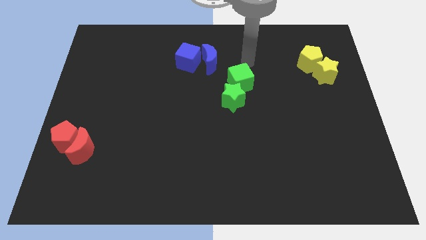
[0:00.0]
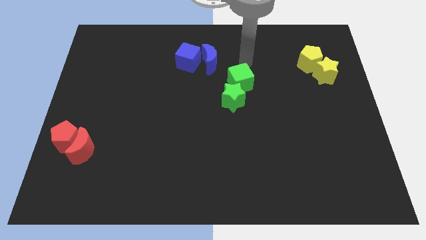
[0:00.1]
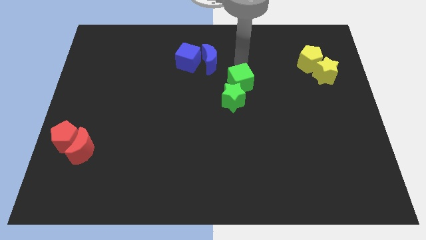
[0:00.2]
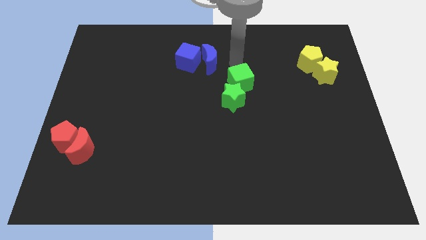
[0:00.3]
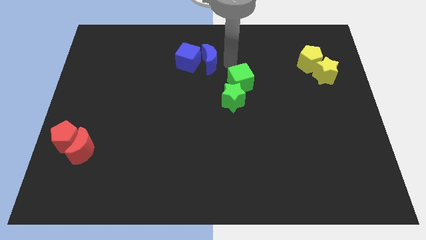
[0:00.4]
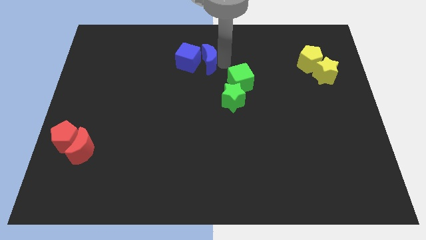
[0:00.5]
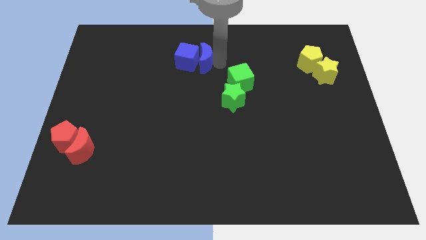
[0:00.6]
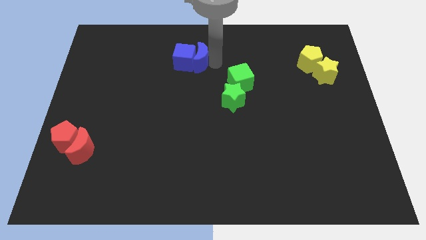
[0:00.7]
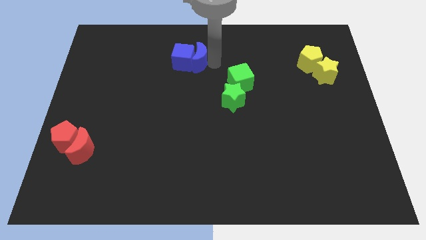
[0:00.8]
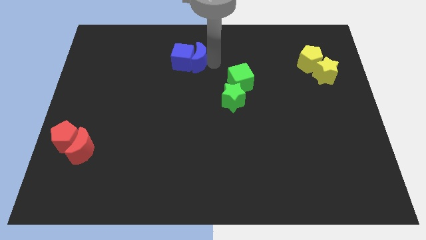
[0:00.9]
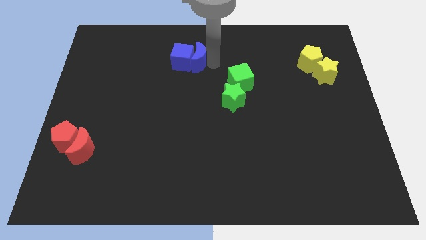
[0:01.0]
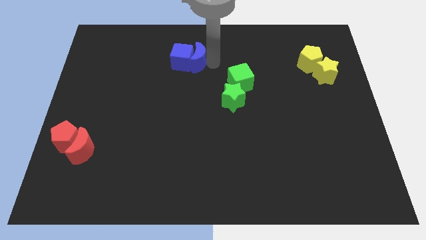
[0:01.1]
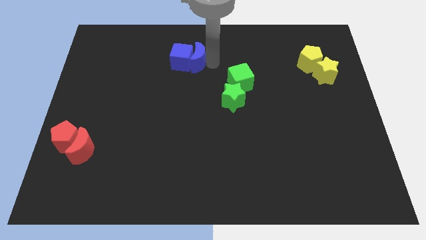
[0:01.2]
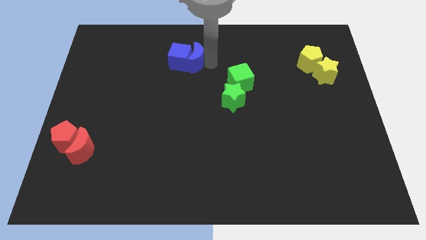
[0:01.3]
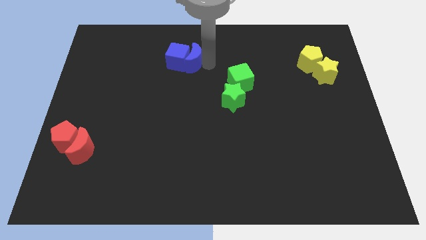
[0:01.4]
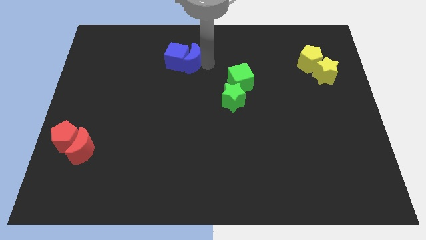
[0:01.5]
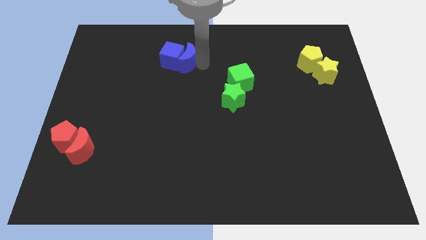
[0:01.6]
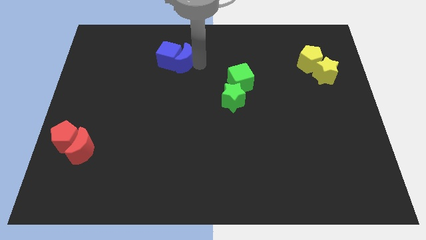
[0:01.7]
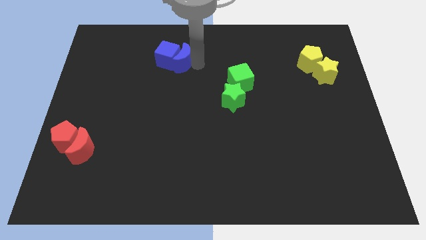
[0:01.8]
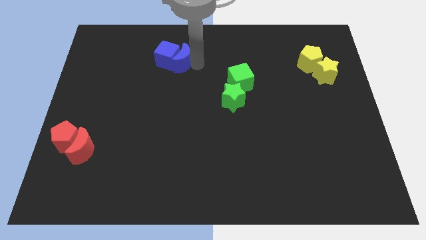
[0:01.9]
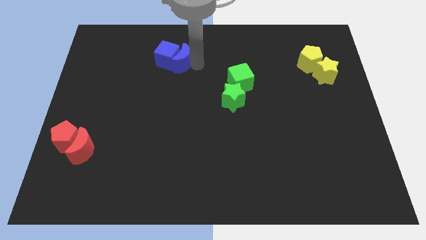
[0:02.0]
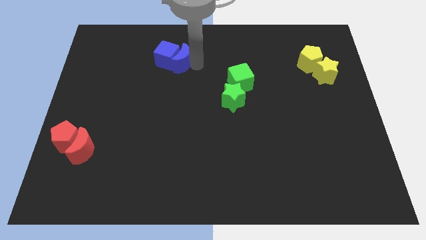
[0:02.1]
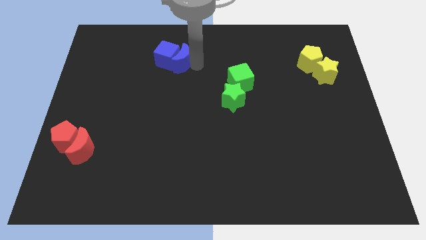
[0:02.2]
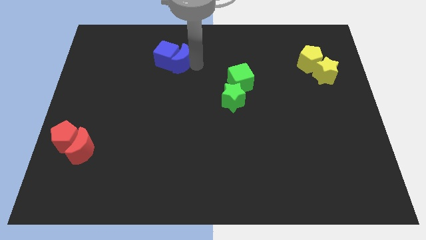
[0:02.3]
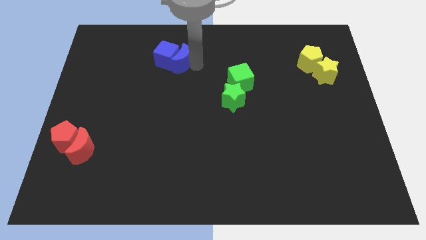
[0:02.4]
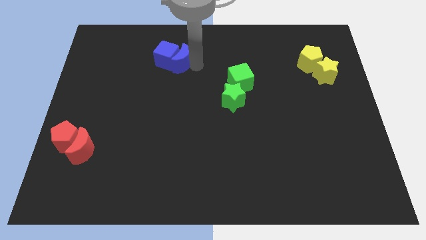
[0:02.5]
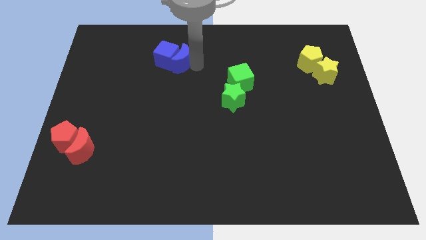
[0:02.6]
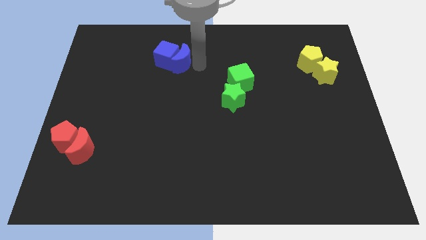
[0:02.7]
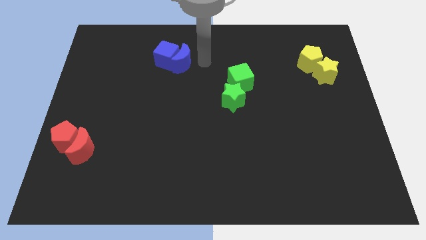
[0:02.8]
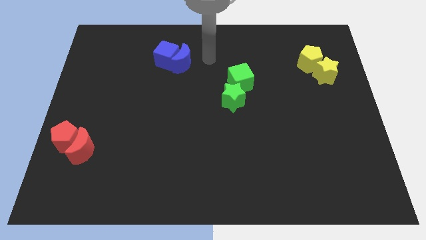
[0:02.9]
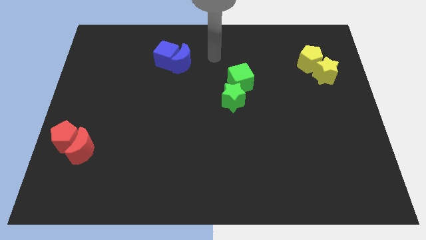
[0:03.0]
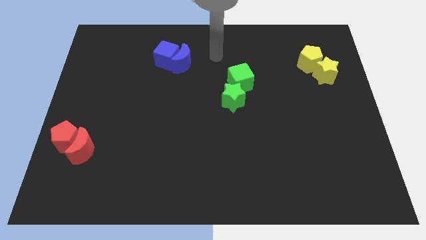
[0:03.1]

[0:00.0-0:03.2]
place blue moon to the right of blue cube

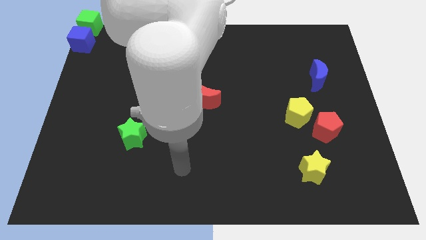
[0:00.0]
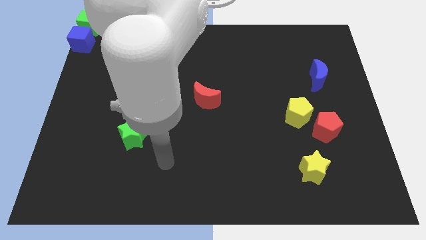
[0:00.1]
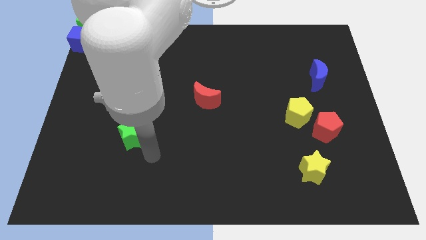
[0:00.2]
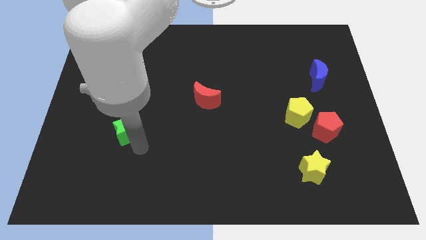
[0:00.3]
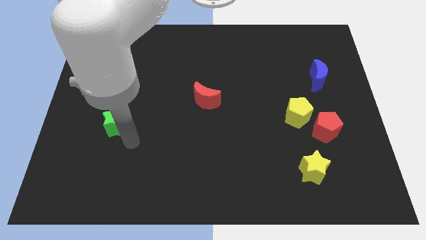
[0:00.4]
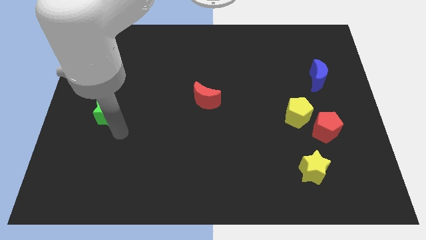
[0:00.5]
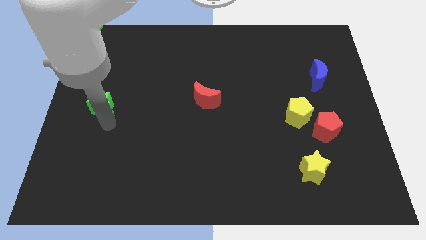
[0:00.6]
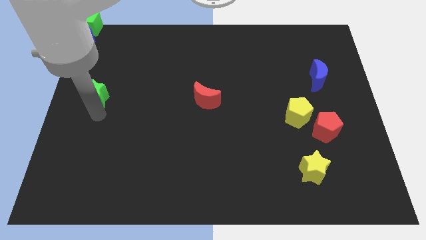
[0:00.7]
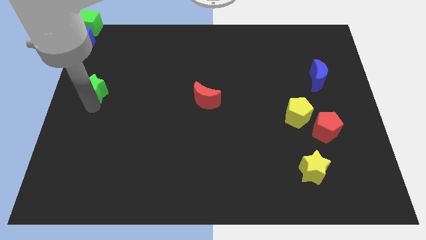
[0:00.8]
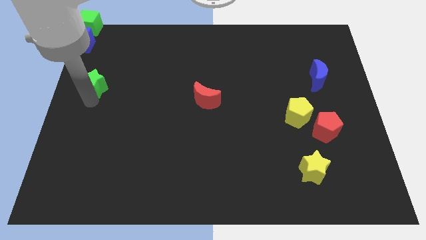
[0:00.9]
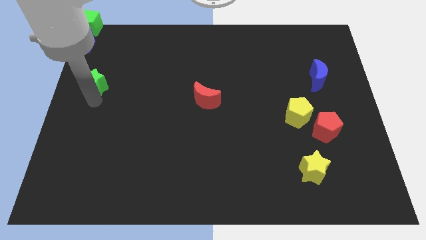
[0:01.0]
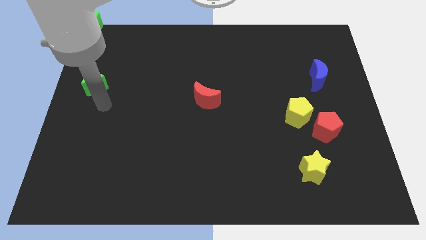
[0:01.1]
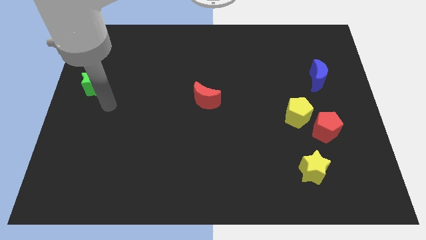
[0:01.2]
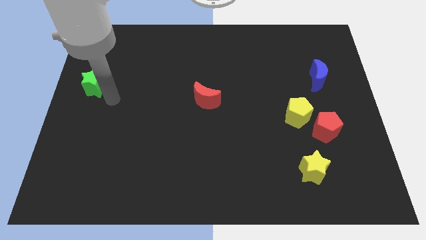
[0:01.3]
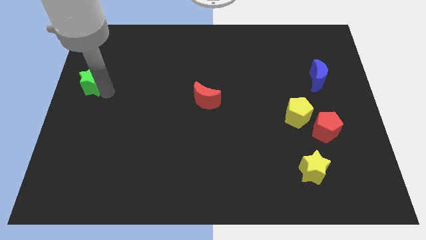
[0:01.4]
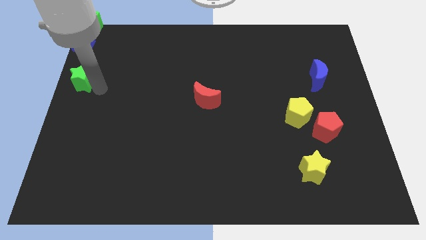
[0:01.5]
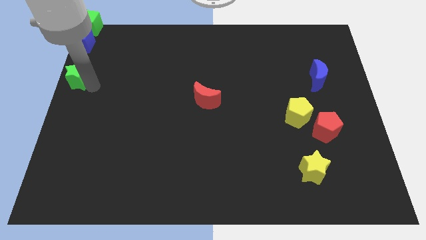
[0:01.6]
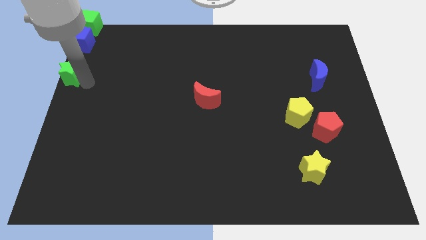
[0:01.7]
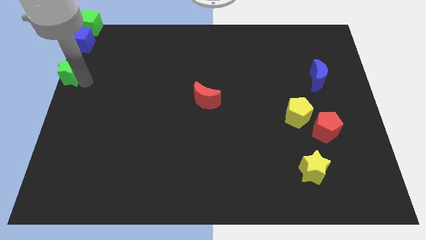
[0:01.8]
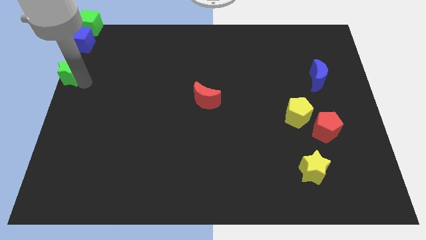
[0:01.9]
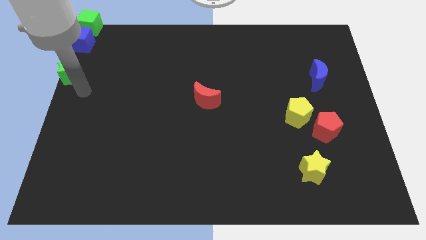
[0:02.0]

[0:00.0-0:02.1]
move the green star to the bottom of the blue cube

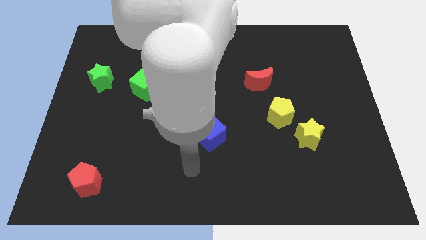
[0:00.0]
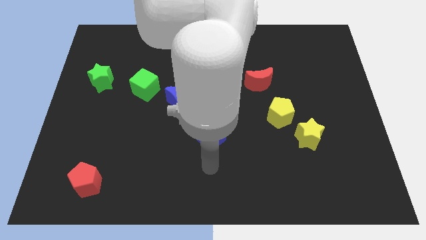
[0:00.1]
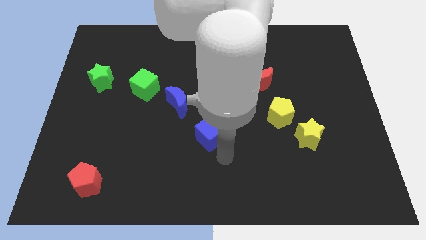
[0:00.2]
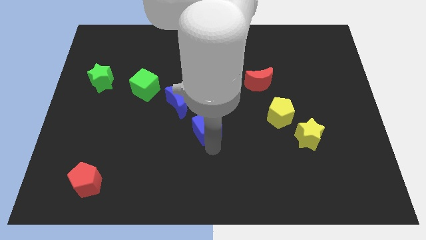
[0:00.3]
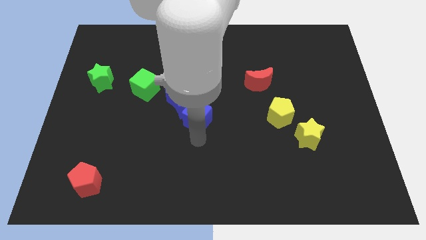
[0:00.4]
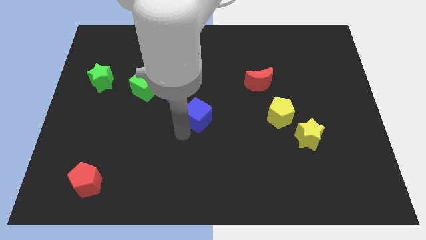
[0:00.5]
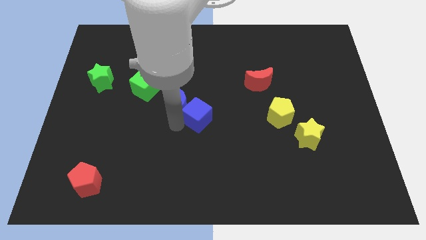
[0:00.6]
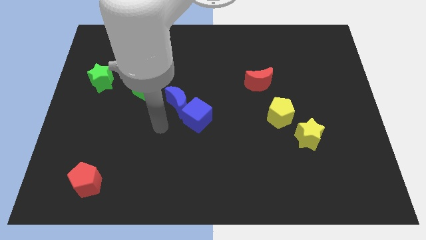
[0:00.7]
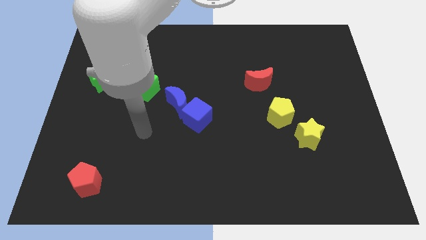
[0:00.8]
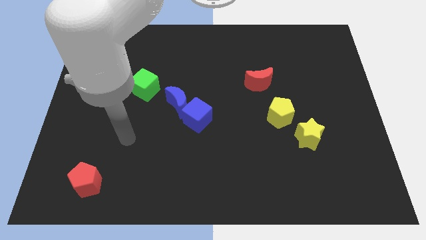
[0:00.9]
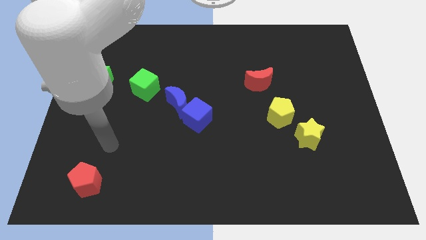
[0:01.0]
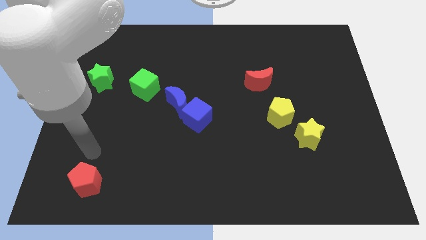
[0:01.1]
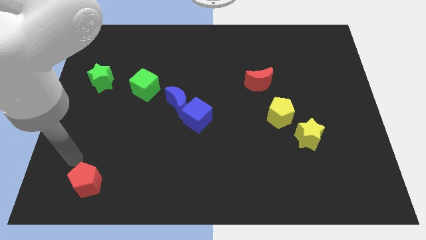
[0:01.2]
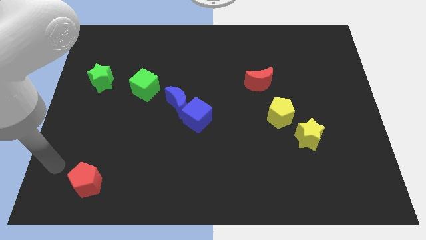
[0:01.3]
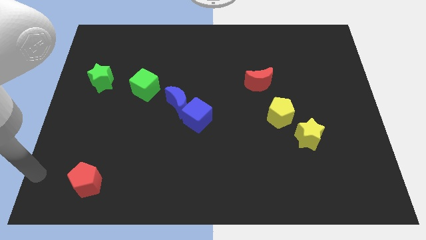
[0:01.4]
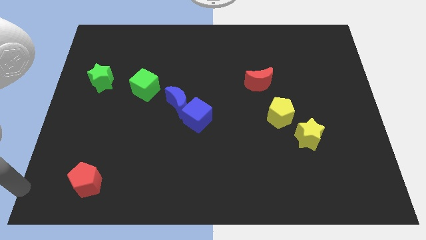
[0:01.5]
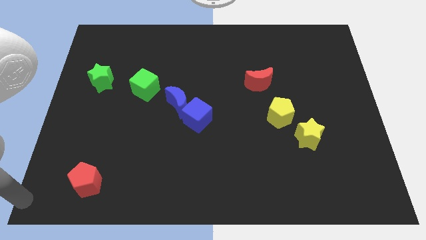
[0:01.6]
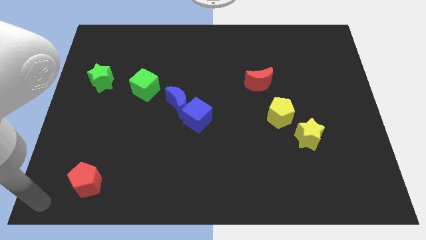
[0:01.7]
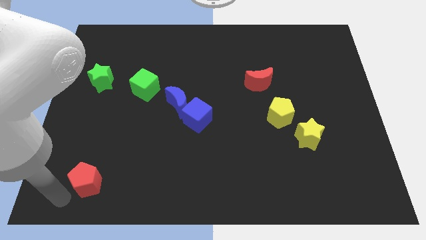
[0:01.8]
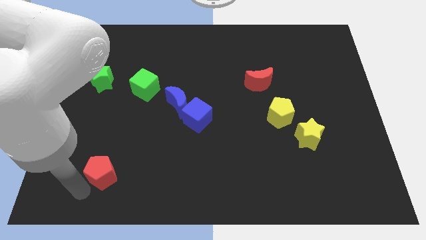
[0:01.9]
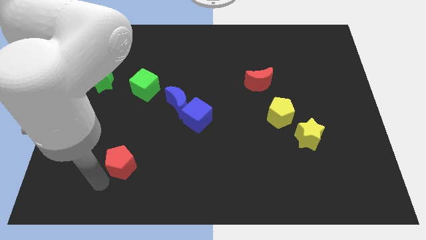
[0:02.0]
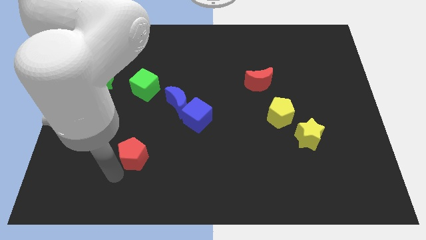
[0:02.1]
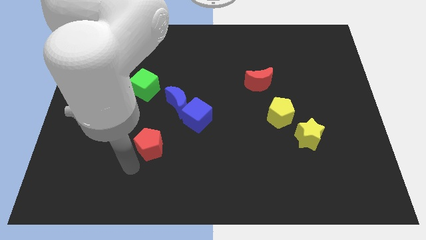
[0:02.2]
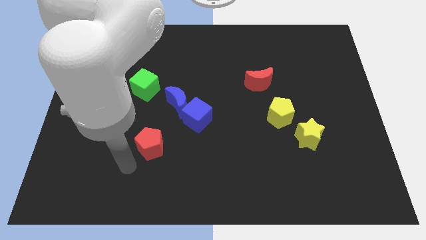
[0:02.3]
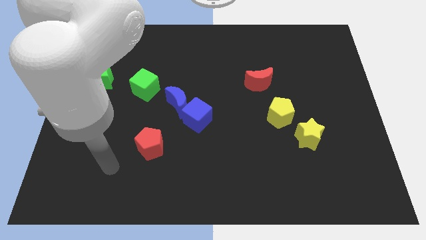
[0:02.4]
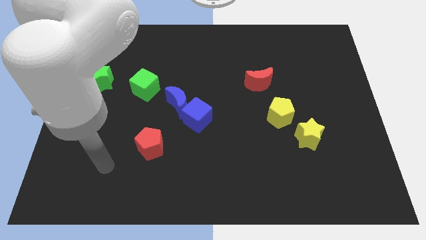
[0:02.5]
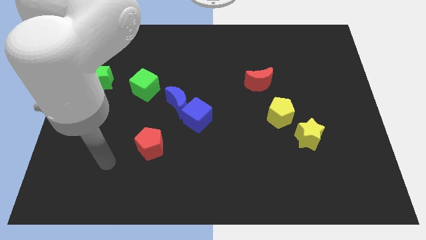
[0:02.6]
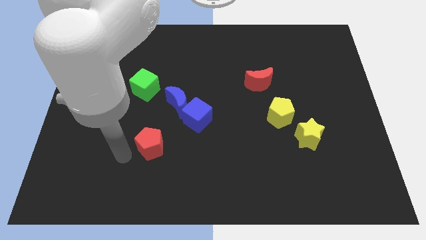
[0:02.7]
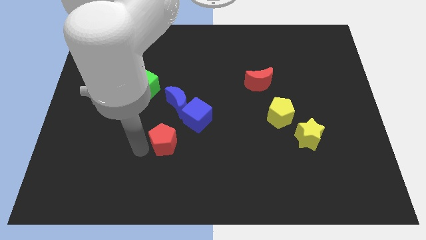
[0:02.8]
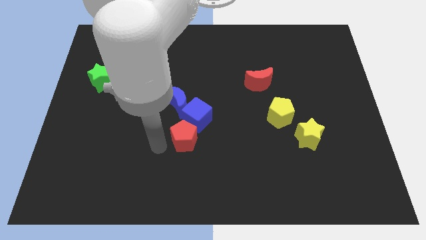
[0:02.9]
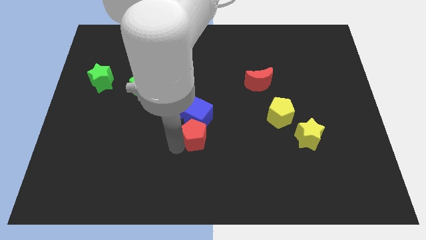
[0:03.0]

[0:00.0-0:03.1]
push red pentagon below blue cube

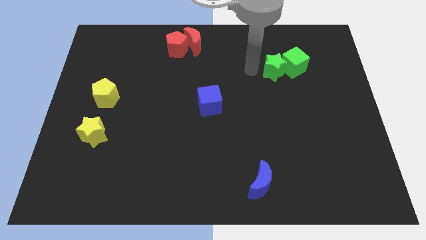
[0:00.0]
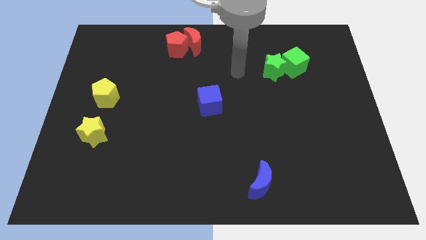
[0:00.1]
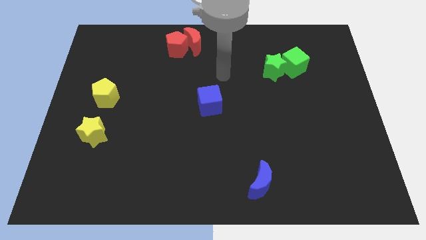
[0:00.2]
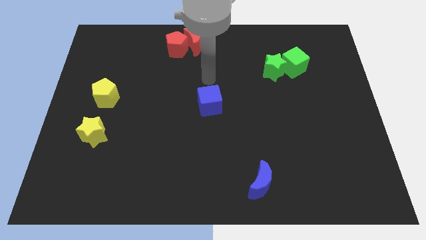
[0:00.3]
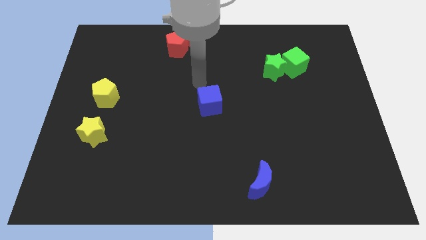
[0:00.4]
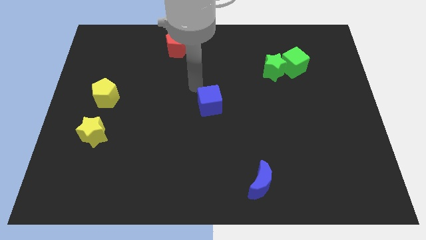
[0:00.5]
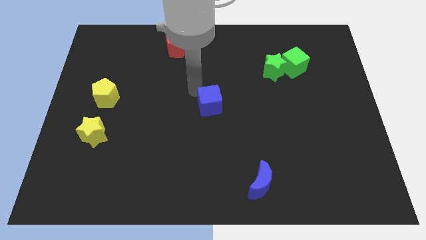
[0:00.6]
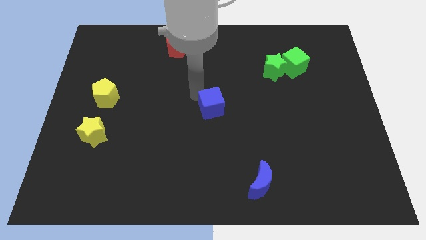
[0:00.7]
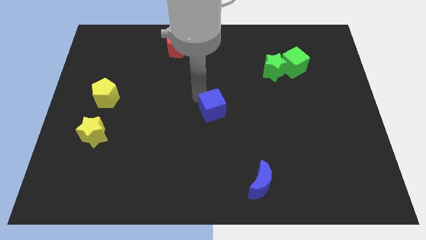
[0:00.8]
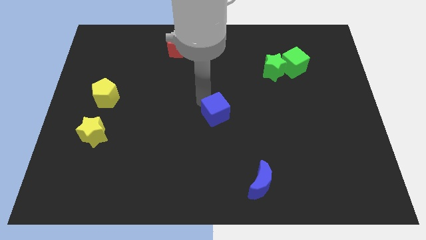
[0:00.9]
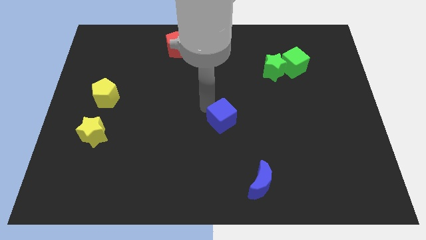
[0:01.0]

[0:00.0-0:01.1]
move your arm away from green star
